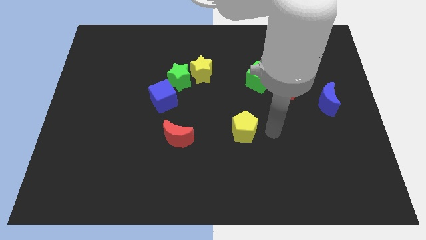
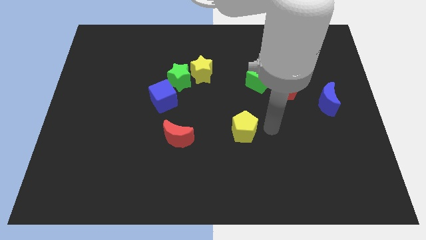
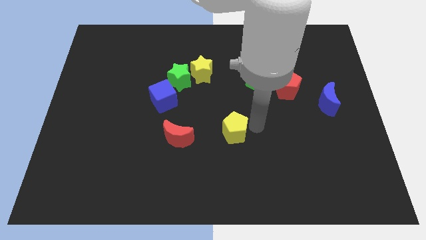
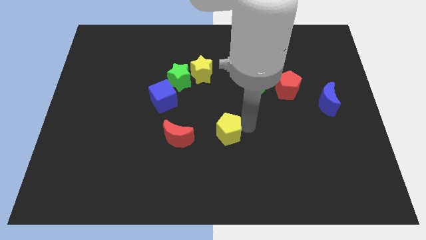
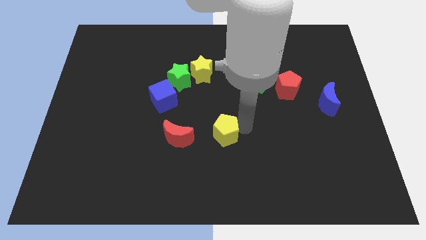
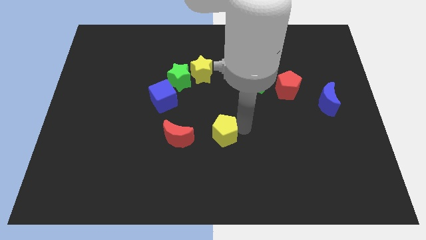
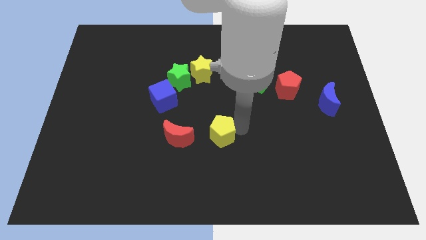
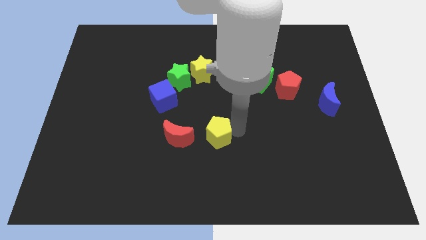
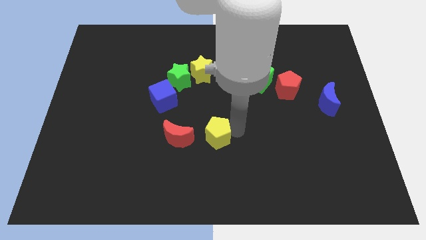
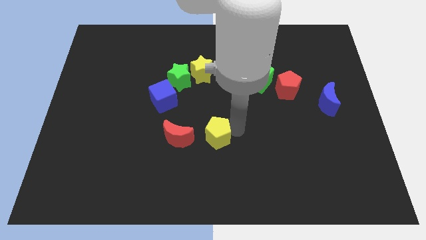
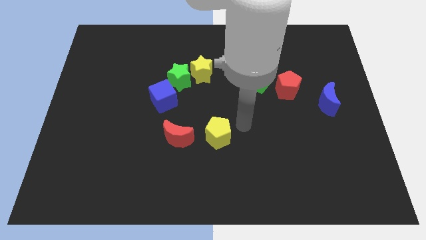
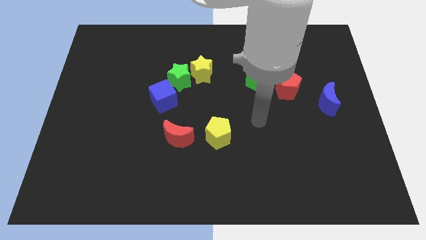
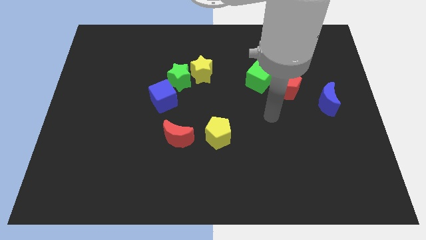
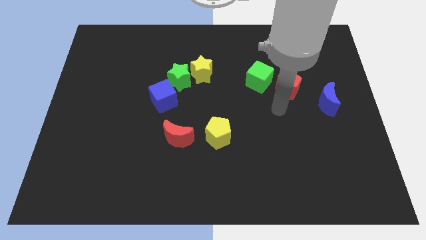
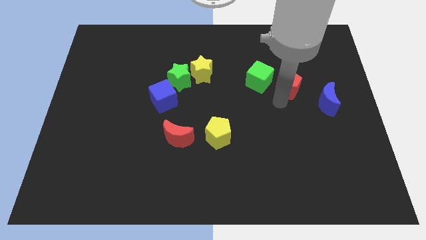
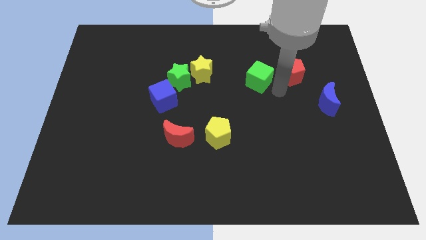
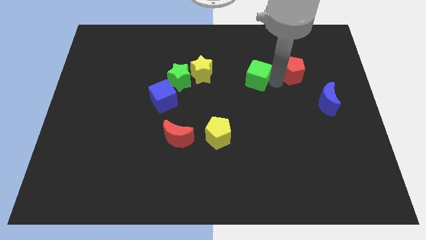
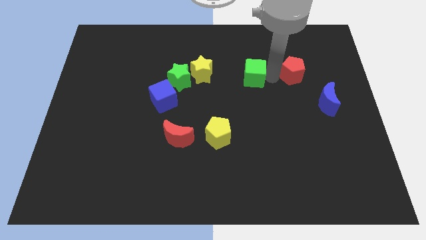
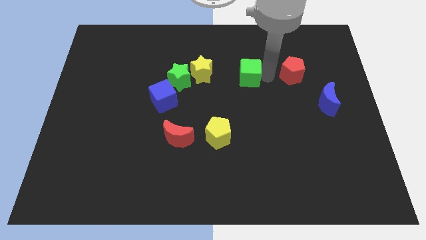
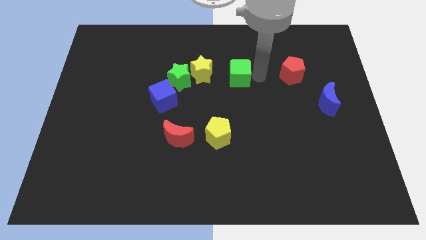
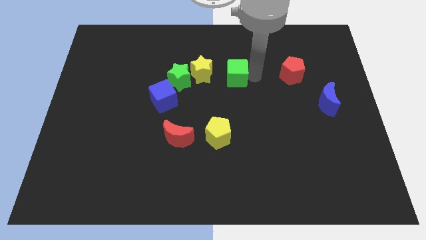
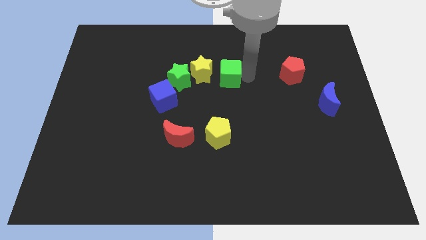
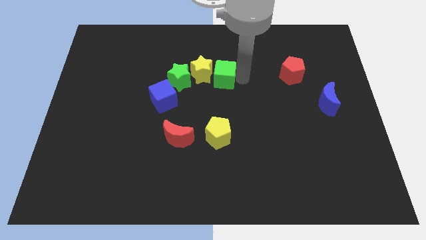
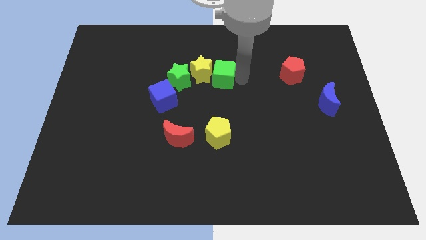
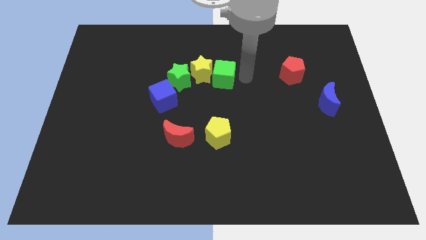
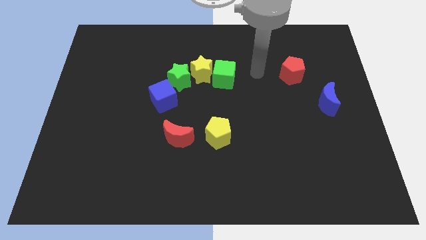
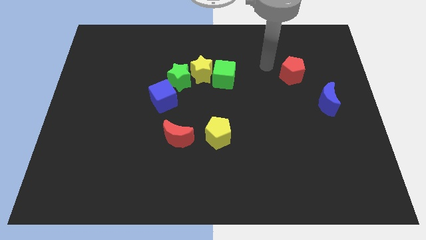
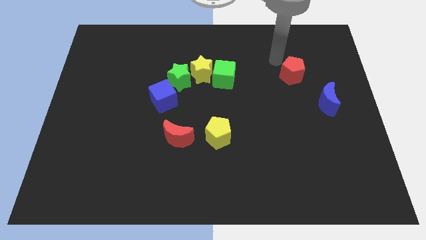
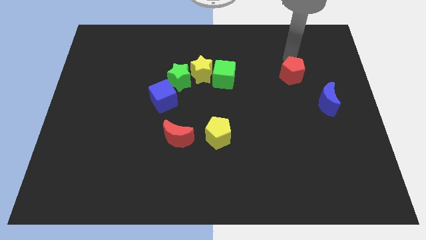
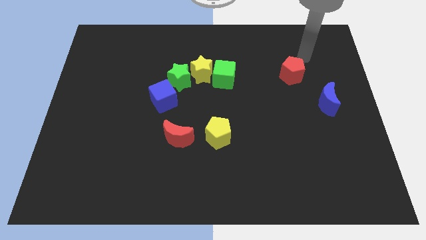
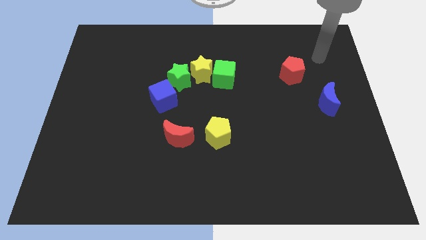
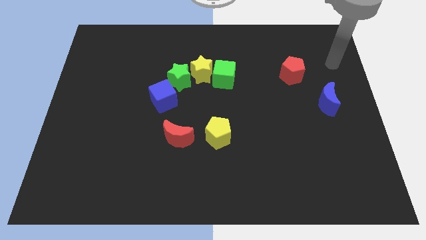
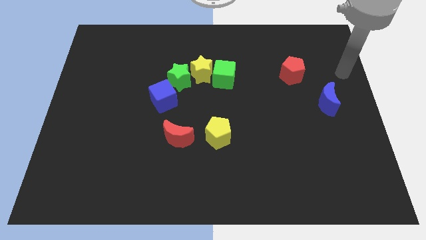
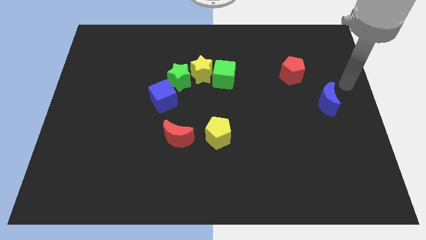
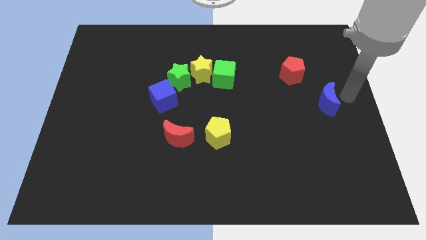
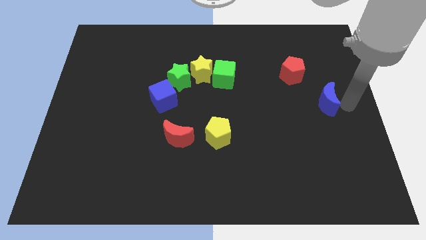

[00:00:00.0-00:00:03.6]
place the green cube right to the yellow star

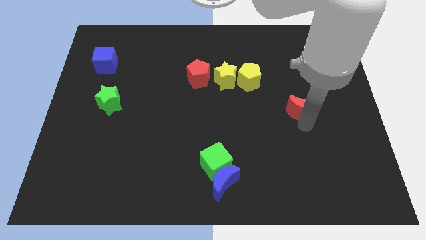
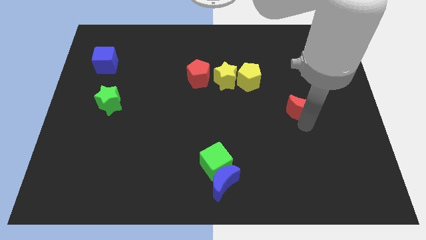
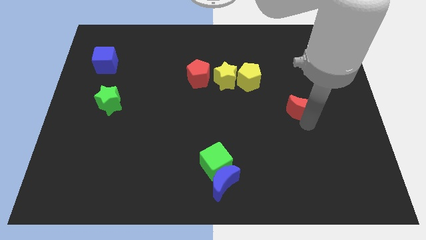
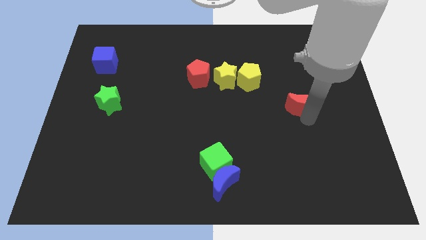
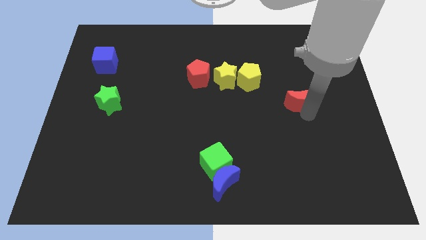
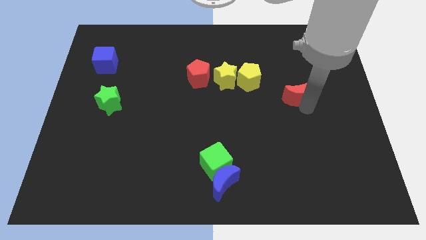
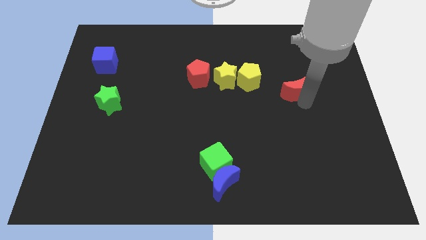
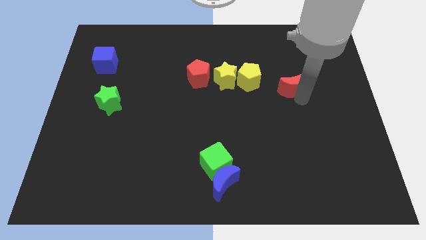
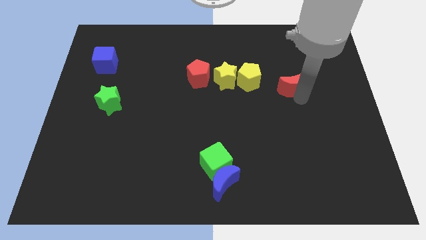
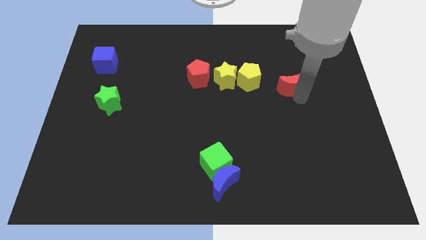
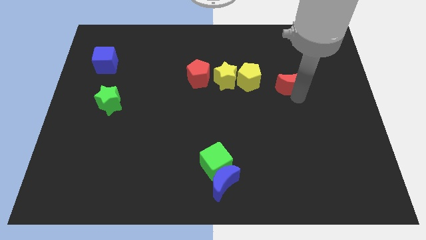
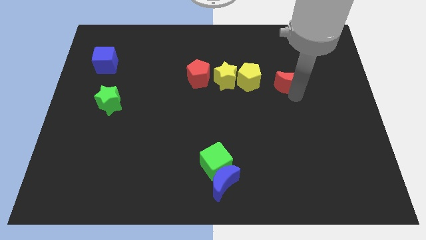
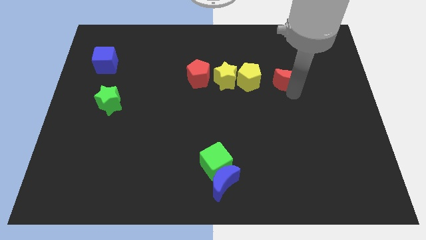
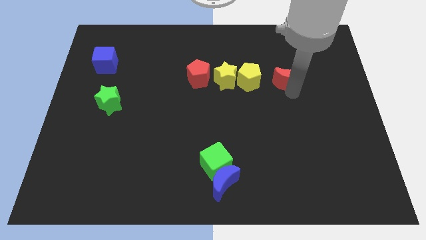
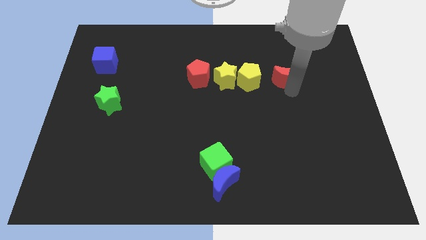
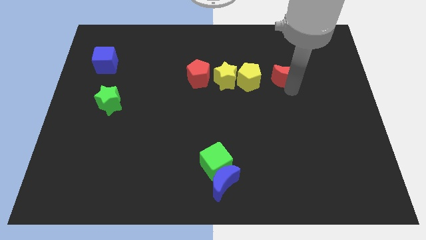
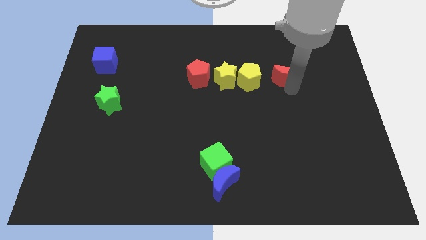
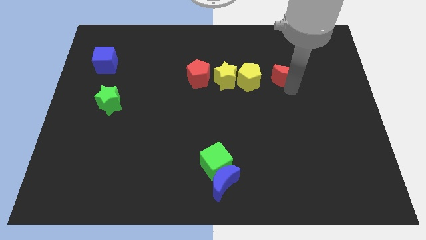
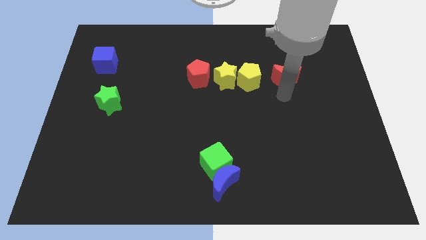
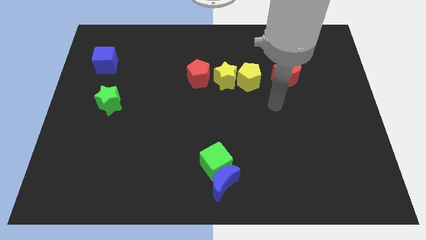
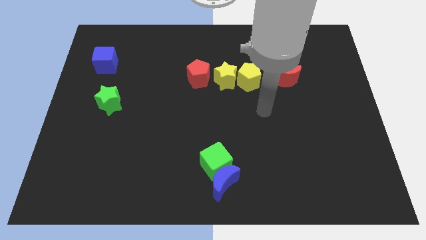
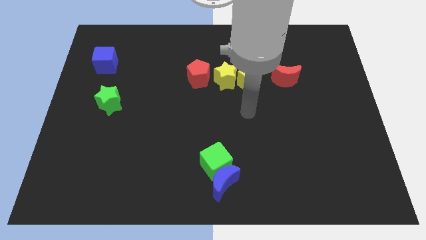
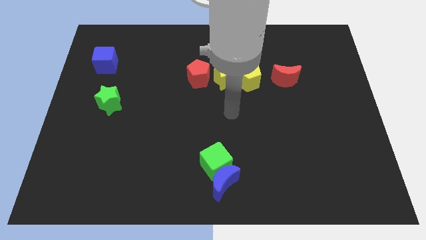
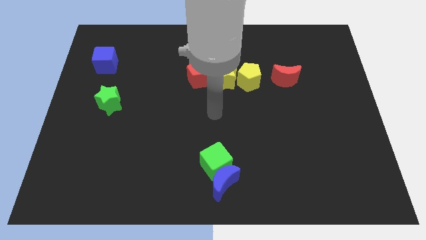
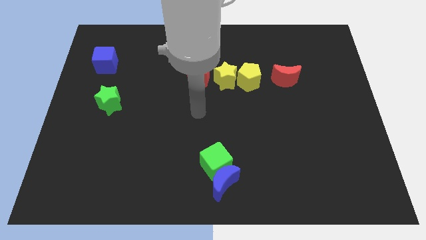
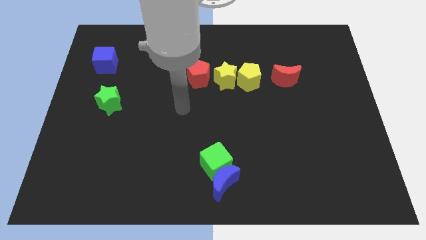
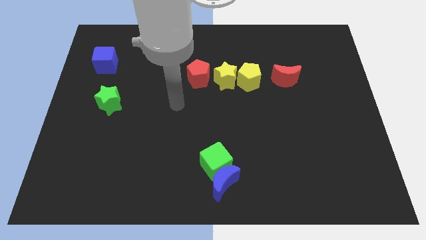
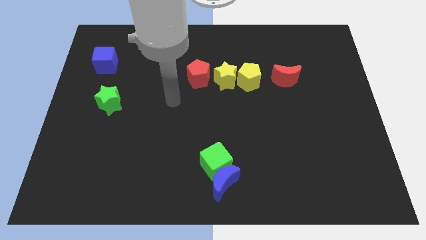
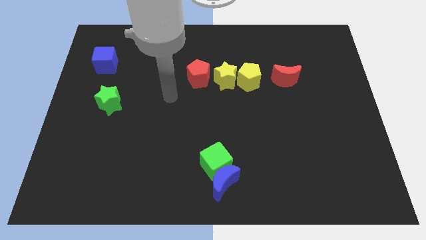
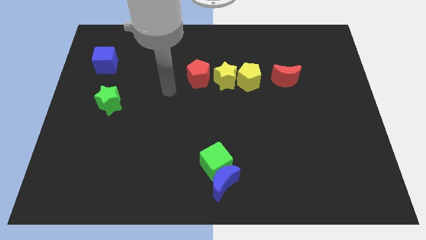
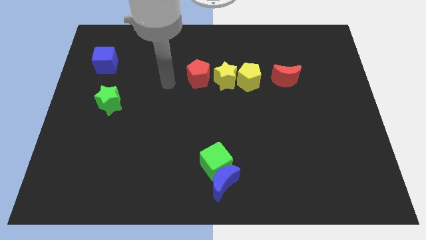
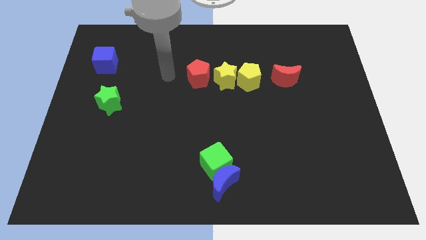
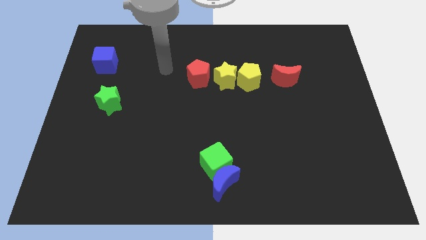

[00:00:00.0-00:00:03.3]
push red crescent on right side of yellow pentagon

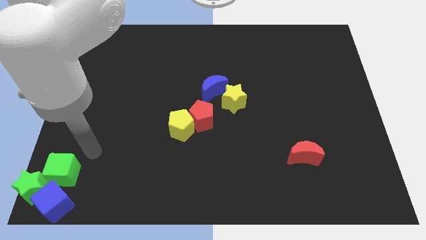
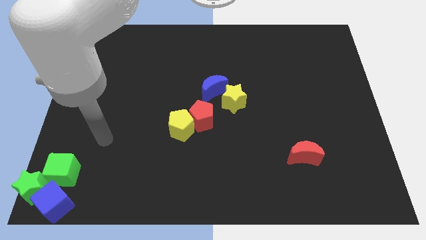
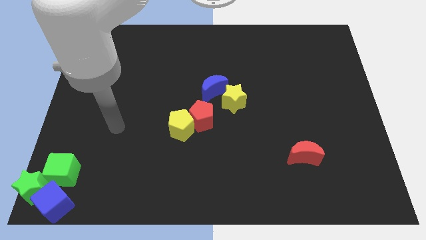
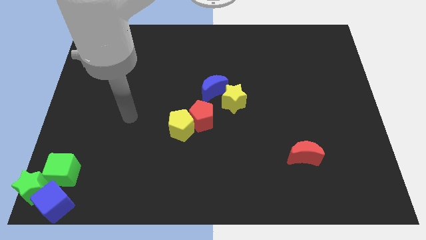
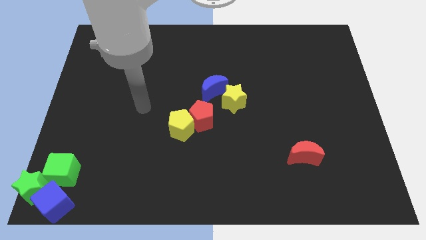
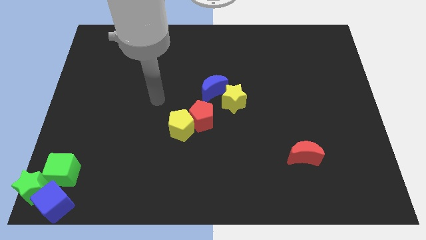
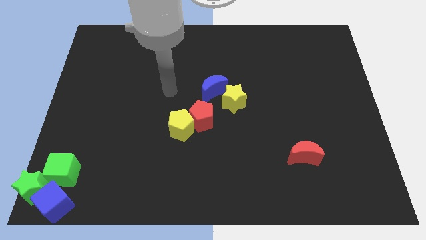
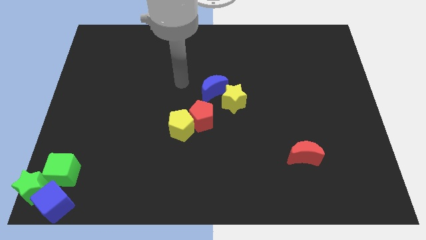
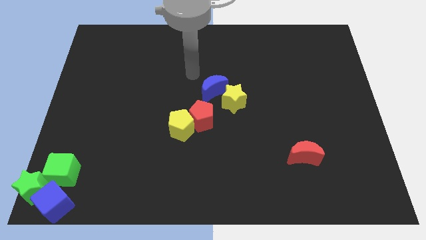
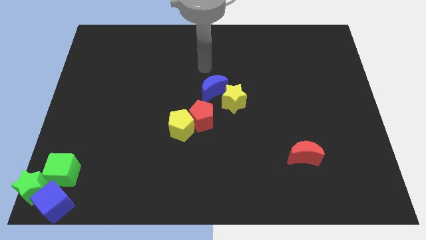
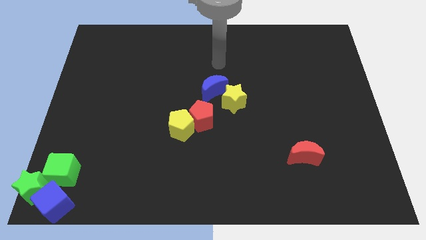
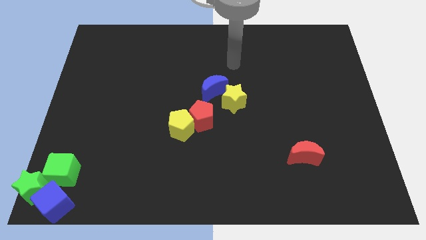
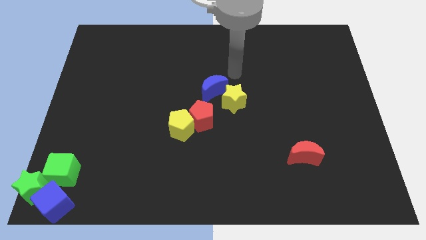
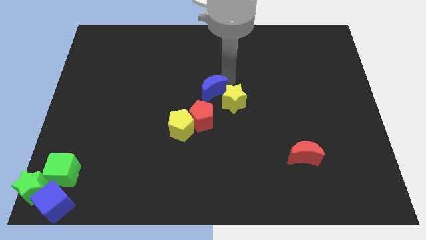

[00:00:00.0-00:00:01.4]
move your arm to the top of blue crescent

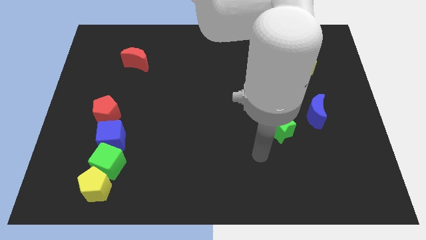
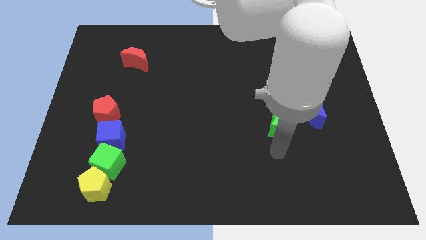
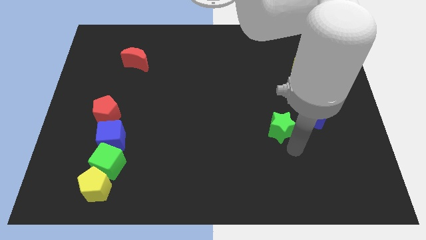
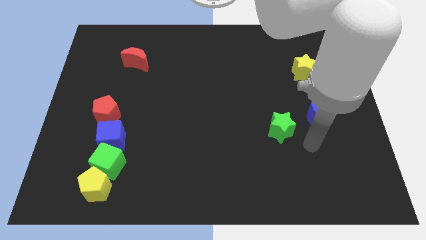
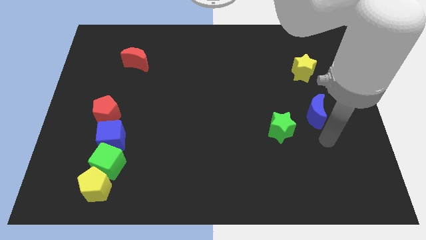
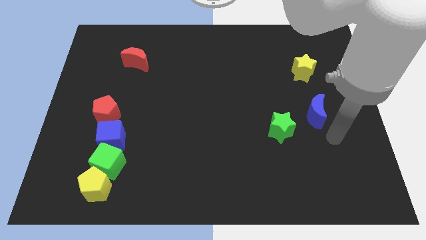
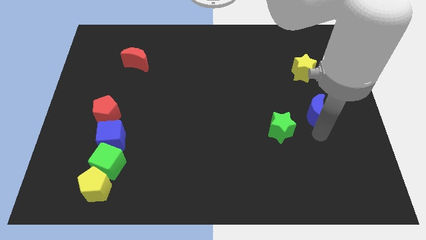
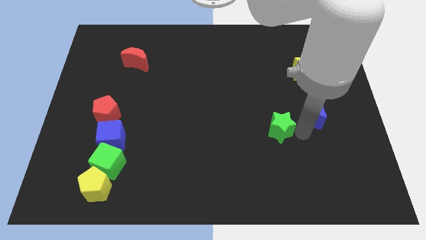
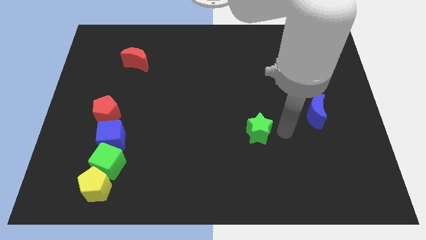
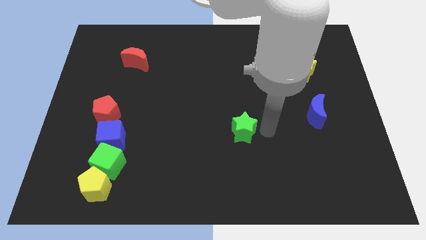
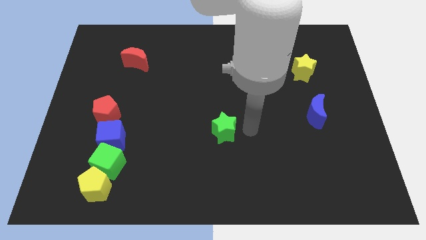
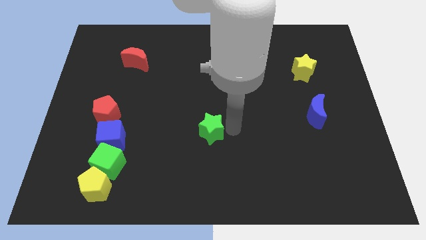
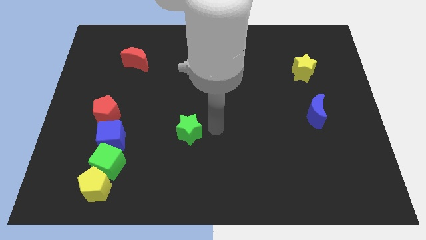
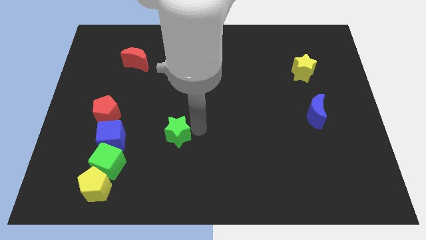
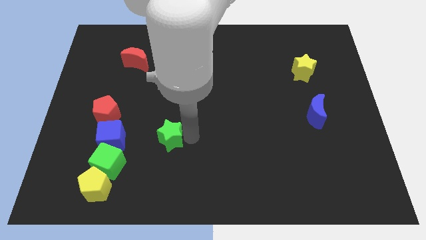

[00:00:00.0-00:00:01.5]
drag the green star towards the blue cube
